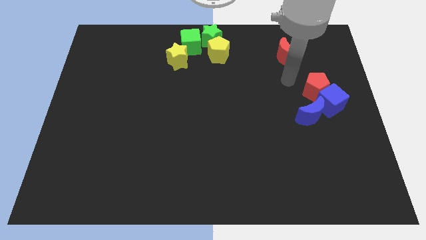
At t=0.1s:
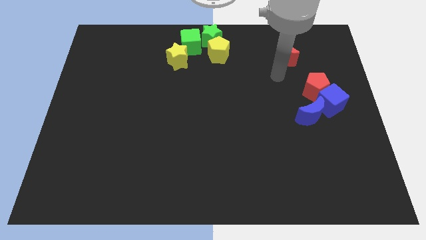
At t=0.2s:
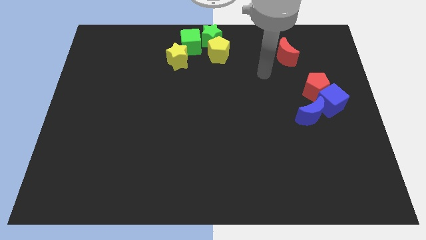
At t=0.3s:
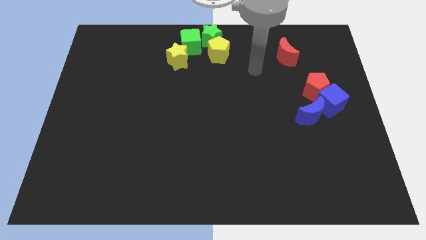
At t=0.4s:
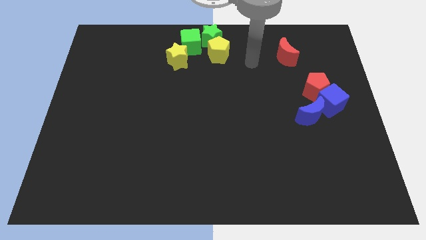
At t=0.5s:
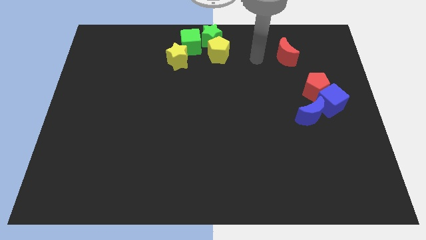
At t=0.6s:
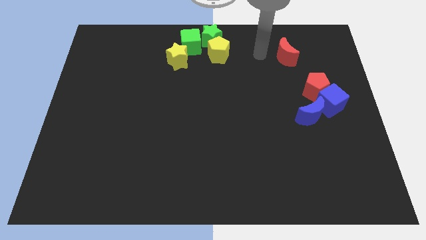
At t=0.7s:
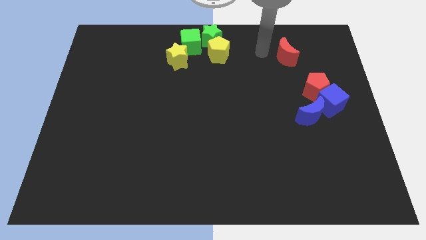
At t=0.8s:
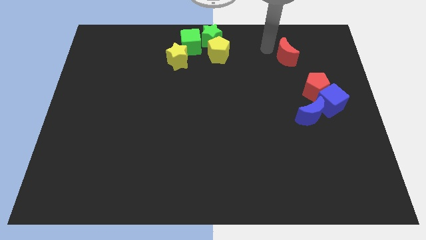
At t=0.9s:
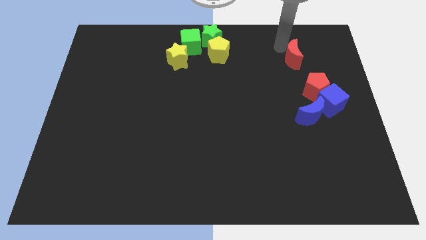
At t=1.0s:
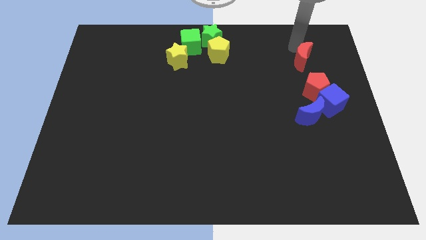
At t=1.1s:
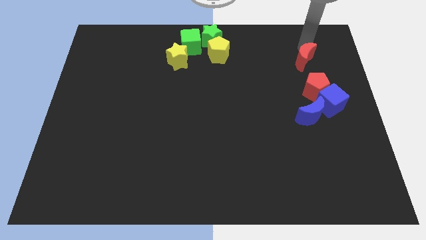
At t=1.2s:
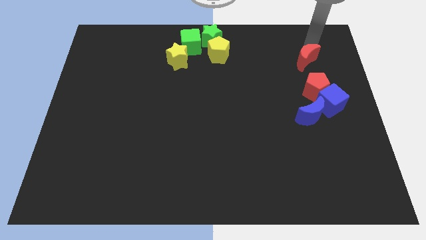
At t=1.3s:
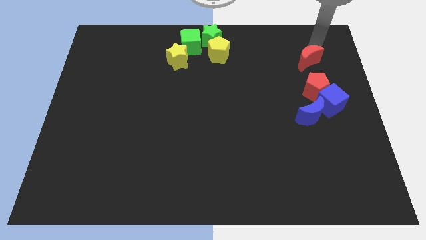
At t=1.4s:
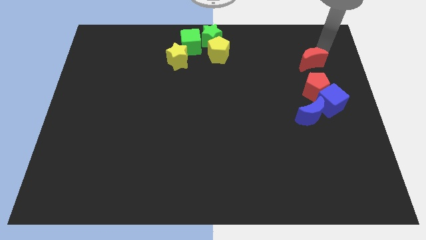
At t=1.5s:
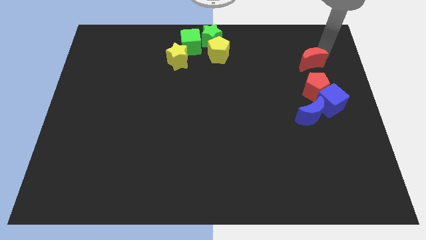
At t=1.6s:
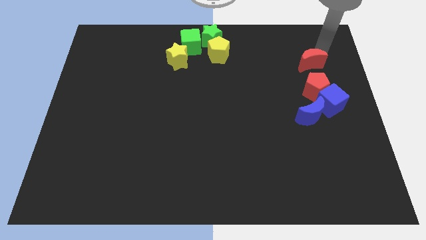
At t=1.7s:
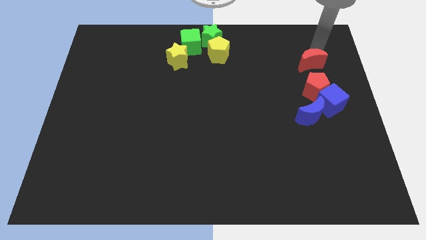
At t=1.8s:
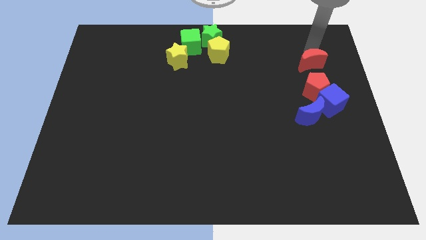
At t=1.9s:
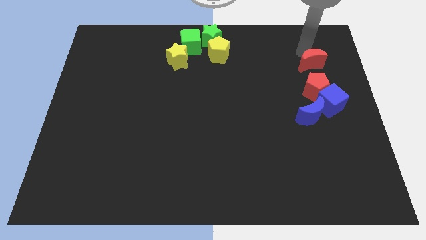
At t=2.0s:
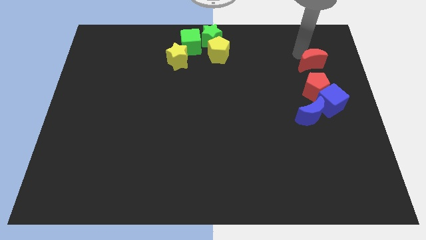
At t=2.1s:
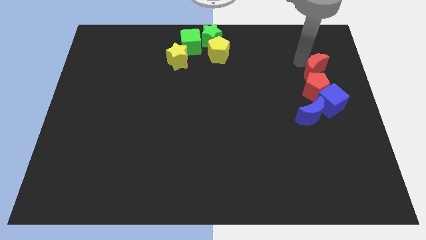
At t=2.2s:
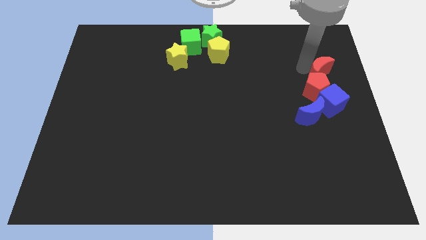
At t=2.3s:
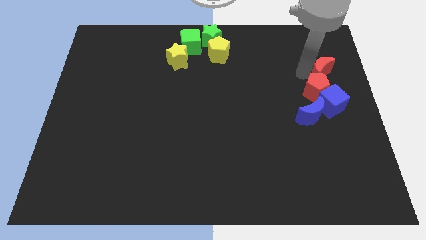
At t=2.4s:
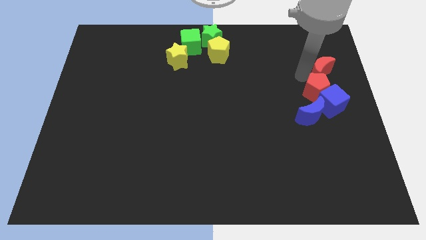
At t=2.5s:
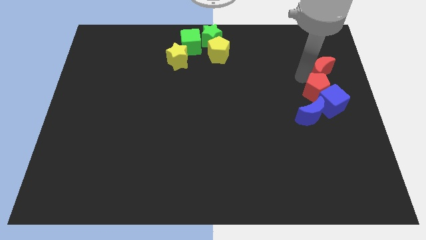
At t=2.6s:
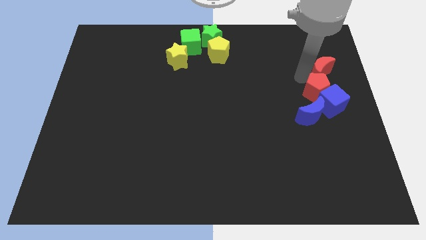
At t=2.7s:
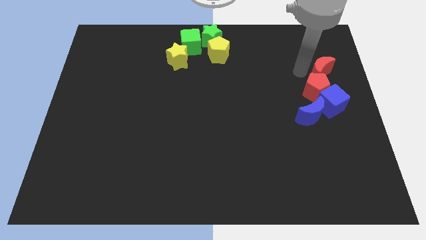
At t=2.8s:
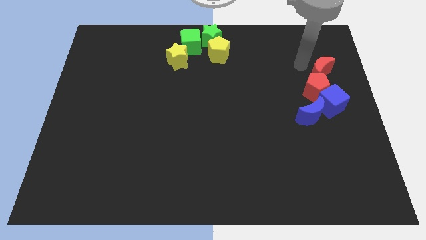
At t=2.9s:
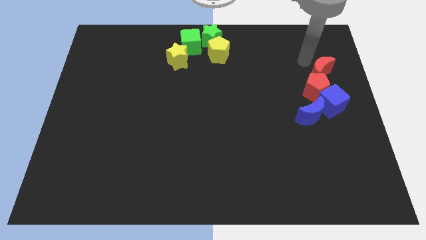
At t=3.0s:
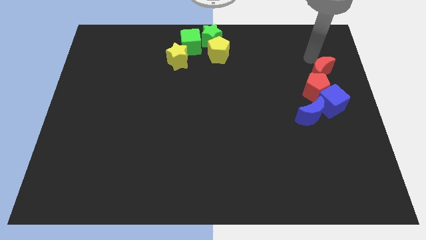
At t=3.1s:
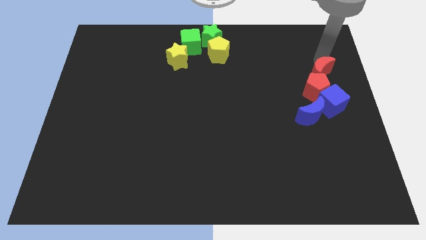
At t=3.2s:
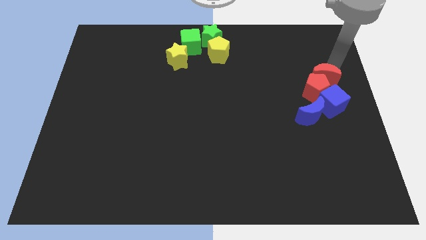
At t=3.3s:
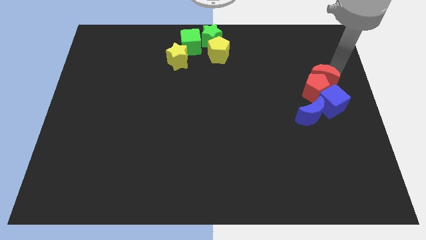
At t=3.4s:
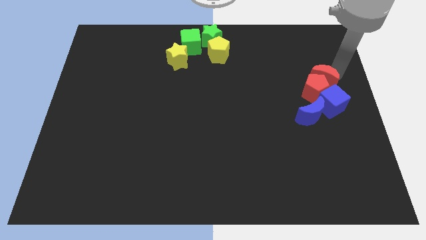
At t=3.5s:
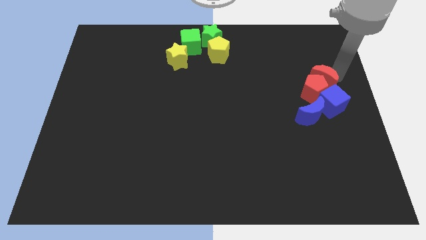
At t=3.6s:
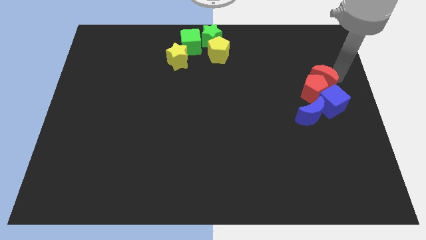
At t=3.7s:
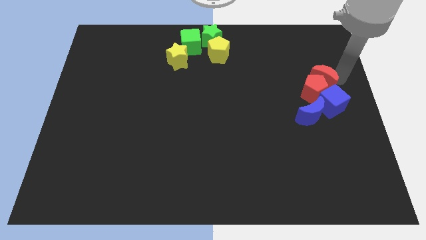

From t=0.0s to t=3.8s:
move the red crescent into the red pentagon

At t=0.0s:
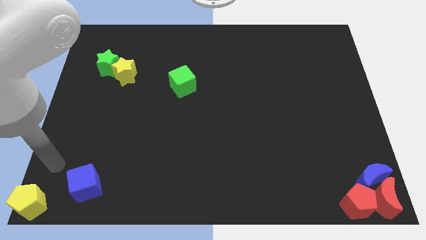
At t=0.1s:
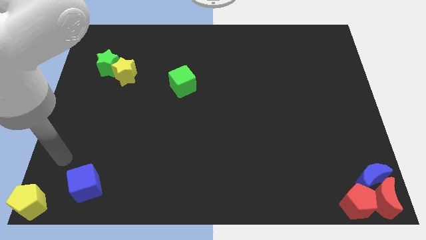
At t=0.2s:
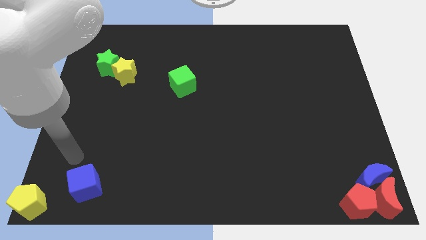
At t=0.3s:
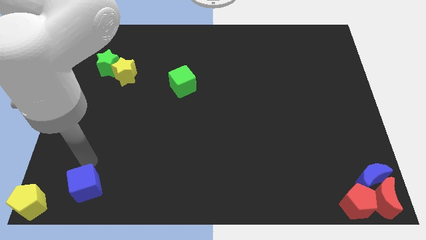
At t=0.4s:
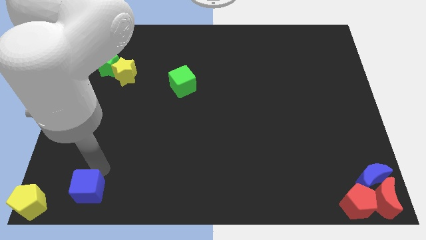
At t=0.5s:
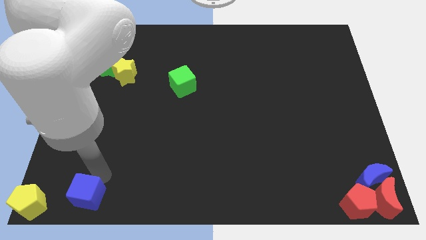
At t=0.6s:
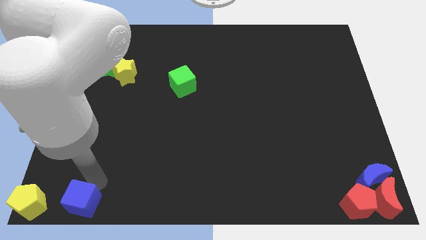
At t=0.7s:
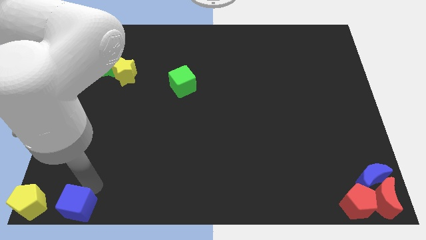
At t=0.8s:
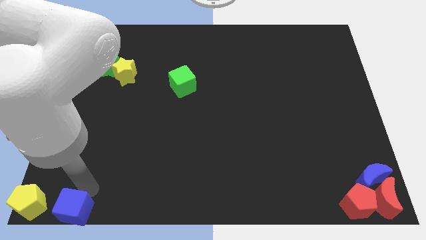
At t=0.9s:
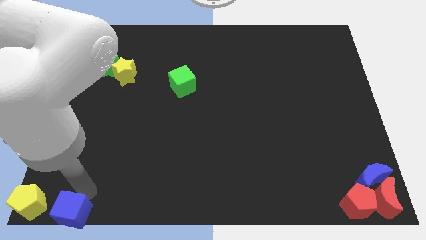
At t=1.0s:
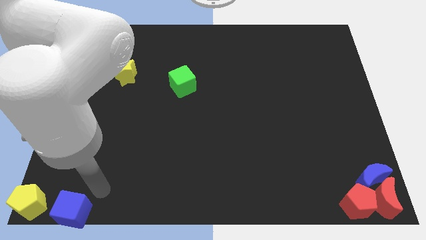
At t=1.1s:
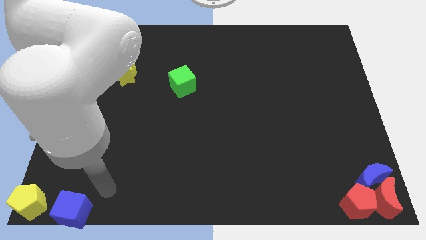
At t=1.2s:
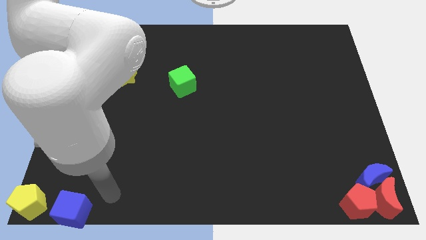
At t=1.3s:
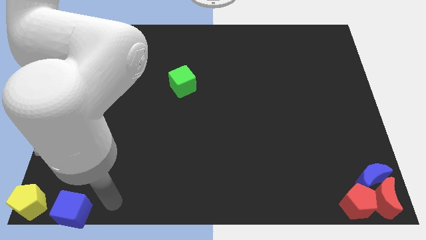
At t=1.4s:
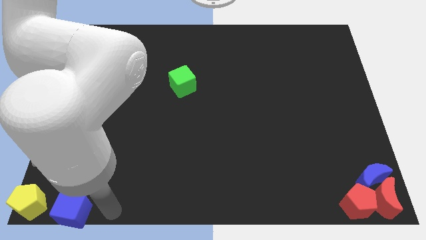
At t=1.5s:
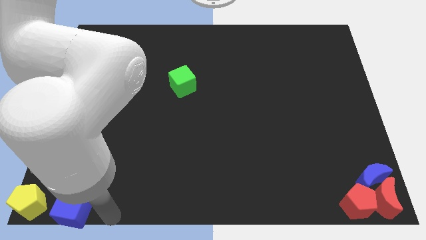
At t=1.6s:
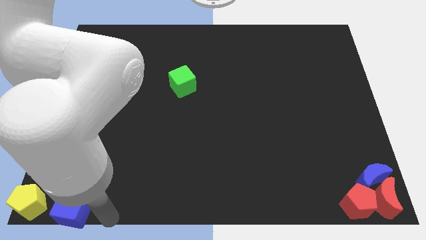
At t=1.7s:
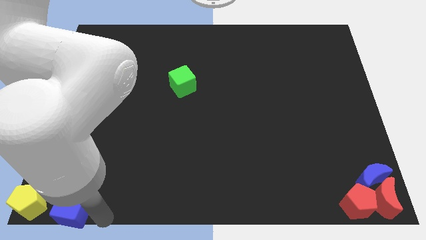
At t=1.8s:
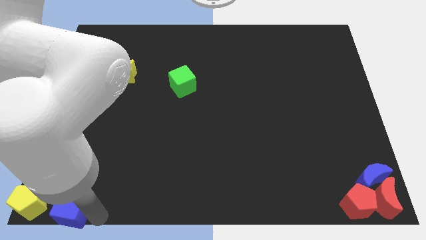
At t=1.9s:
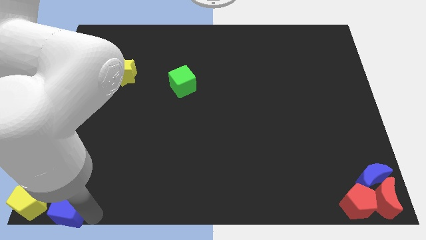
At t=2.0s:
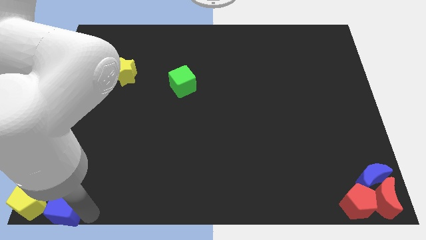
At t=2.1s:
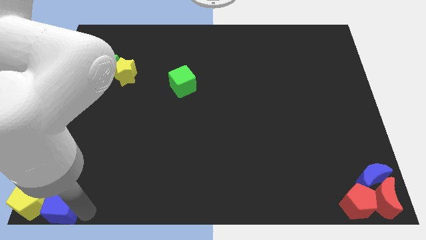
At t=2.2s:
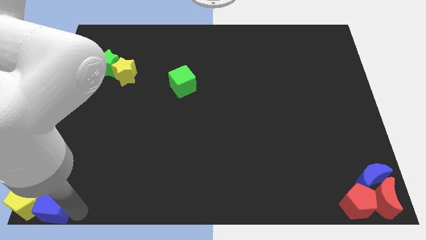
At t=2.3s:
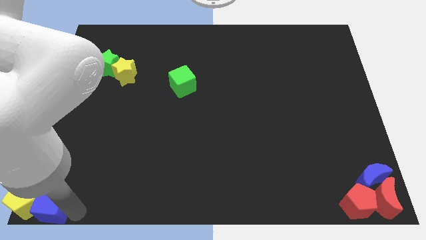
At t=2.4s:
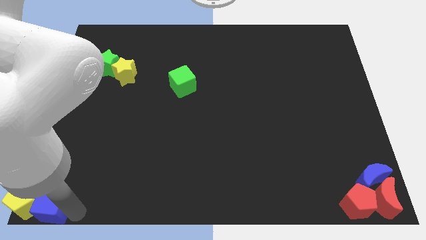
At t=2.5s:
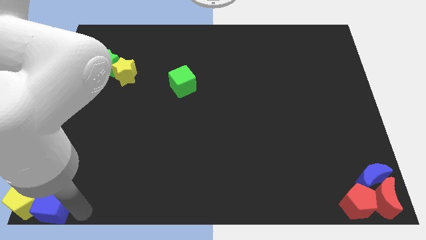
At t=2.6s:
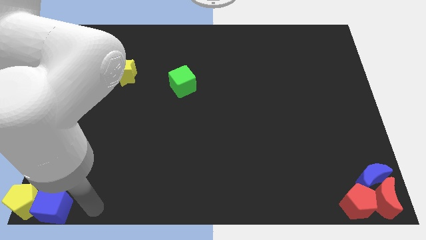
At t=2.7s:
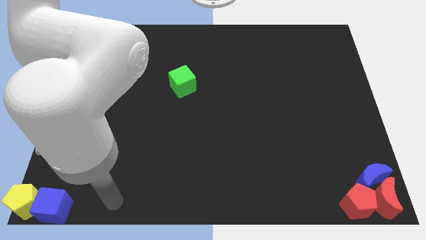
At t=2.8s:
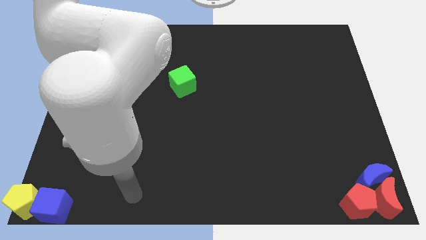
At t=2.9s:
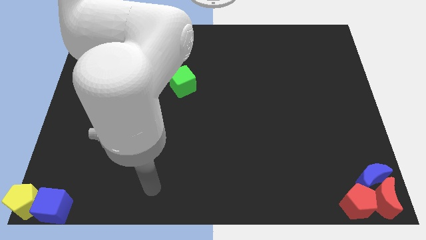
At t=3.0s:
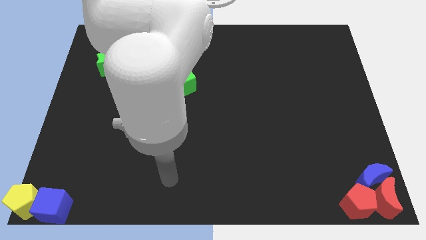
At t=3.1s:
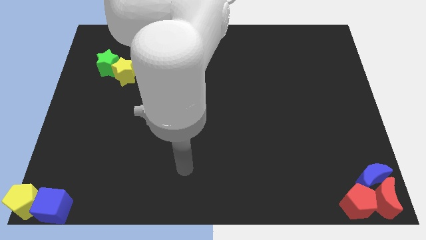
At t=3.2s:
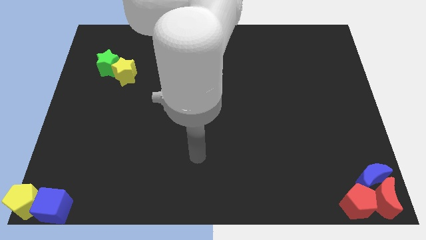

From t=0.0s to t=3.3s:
push the blue cube into yellow pentagon

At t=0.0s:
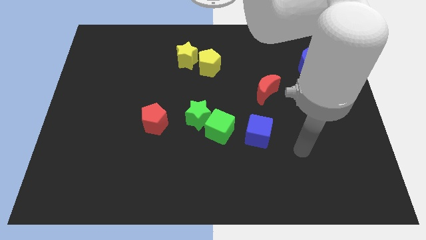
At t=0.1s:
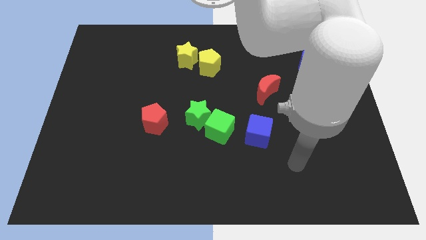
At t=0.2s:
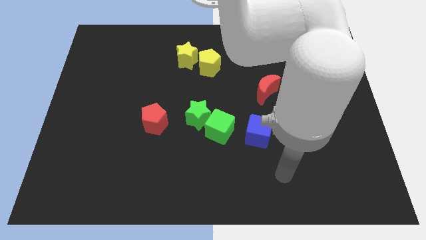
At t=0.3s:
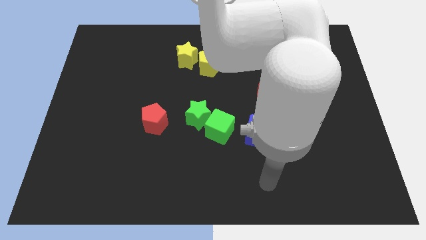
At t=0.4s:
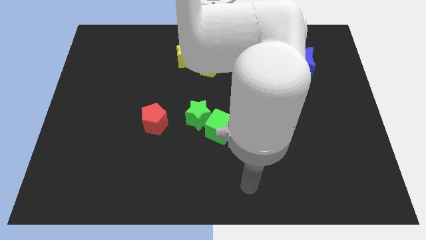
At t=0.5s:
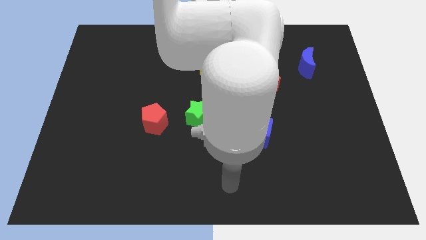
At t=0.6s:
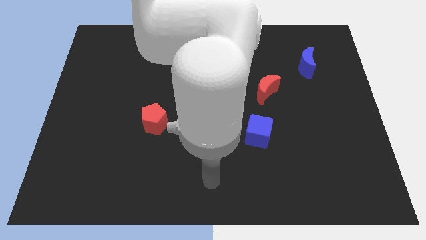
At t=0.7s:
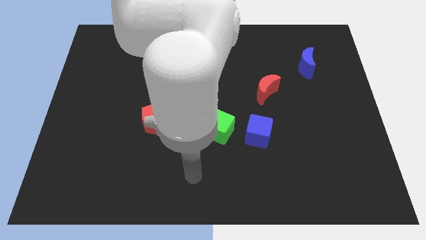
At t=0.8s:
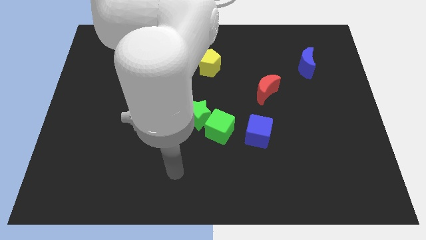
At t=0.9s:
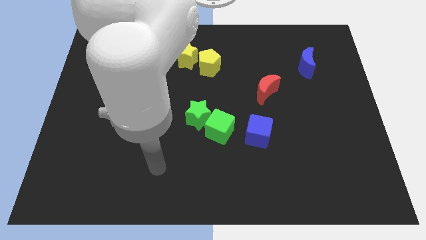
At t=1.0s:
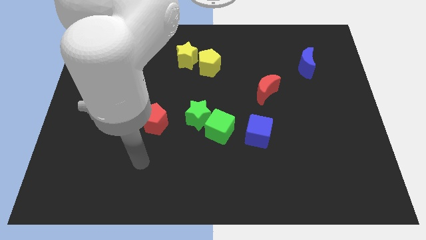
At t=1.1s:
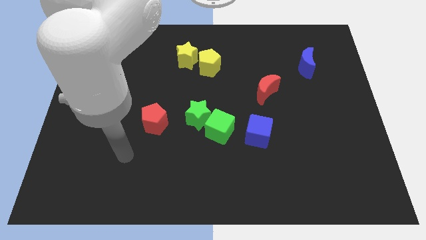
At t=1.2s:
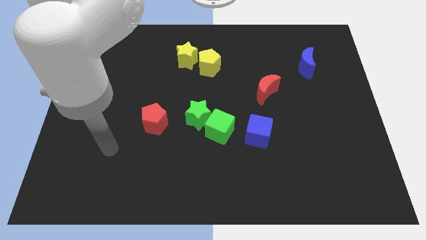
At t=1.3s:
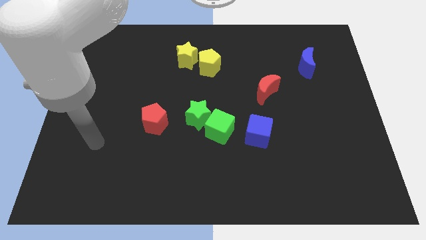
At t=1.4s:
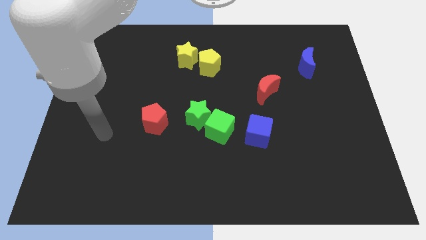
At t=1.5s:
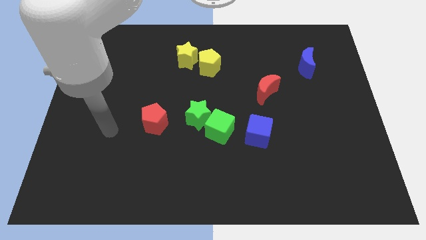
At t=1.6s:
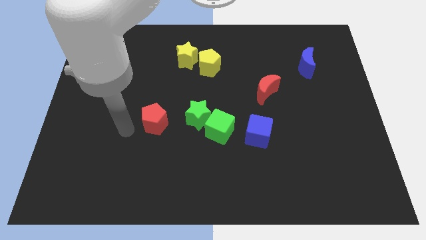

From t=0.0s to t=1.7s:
point the arm to the left of red pentagon

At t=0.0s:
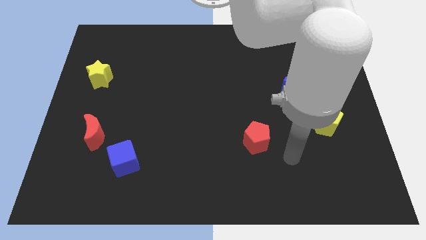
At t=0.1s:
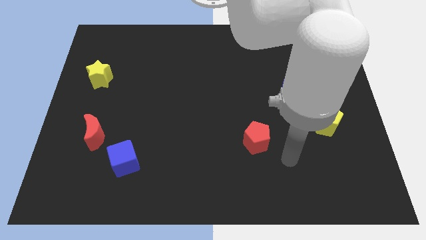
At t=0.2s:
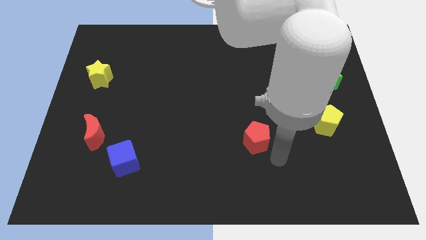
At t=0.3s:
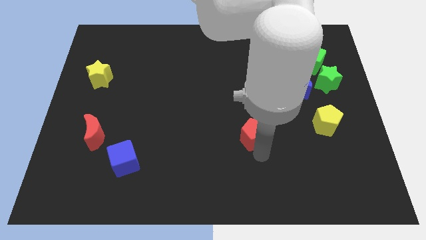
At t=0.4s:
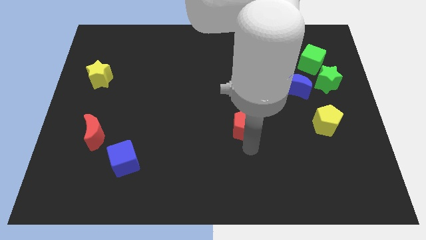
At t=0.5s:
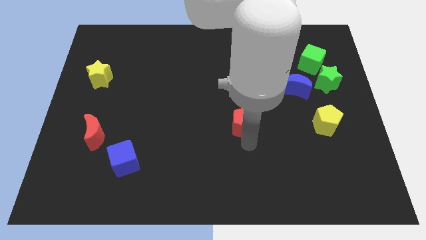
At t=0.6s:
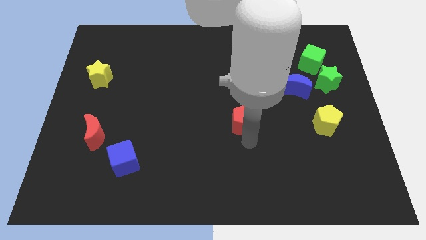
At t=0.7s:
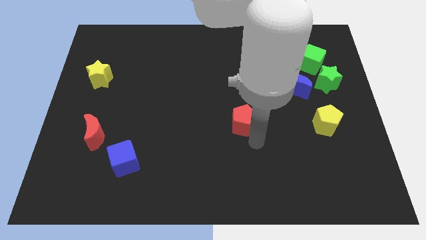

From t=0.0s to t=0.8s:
move red pentagon towards center
